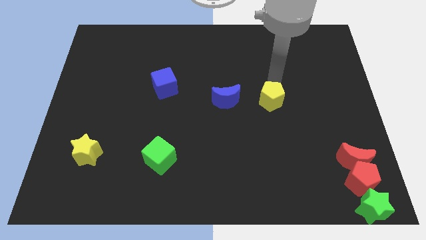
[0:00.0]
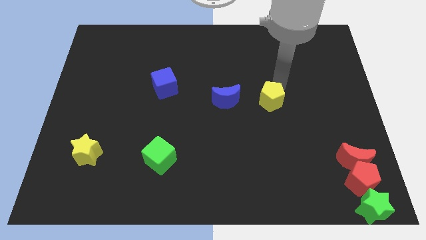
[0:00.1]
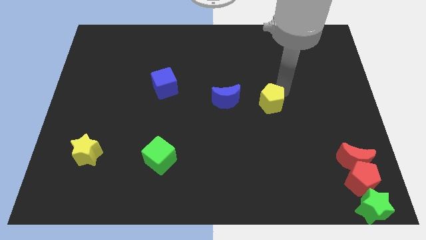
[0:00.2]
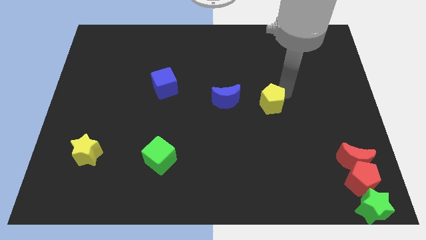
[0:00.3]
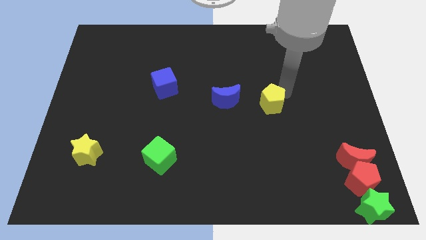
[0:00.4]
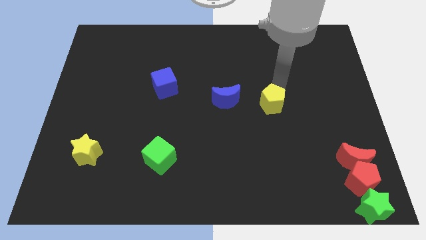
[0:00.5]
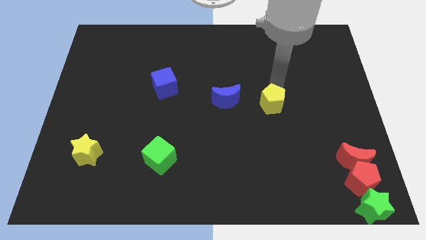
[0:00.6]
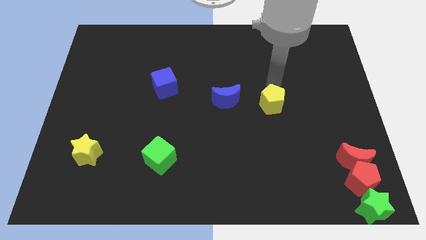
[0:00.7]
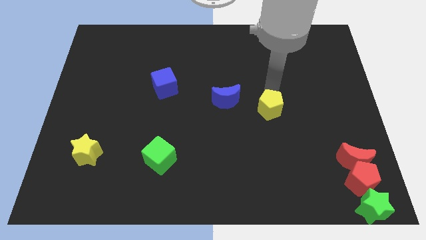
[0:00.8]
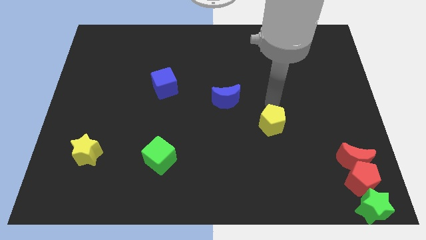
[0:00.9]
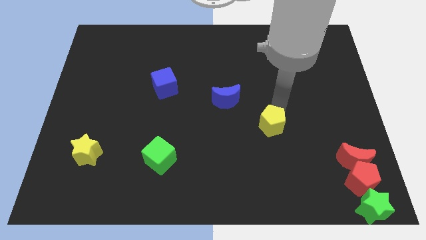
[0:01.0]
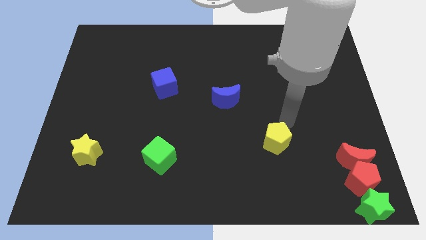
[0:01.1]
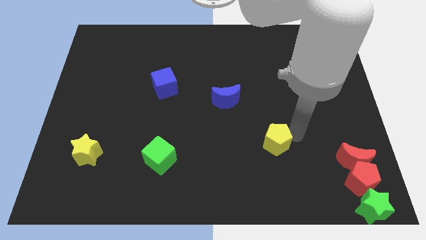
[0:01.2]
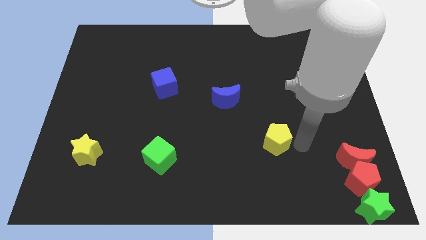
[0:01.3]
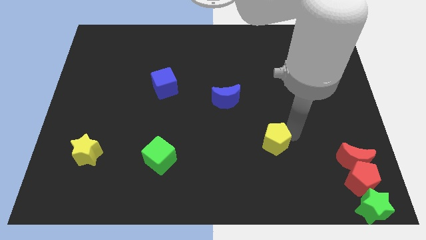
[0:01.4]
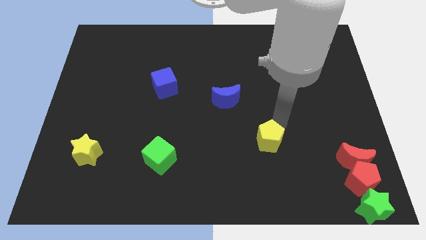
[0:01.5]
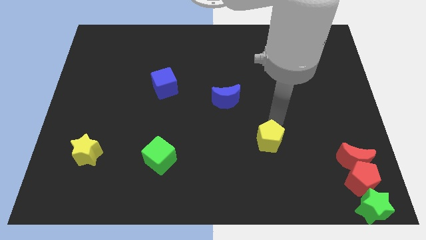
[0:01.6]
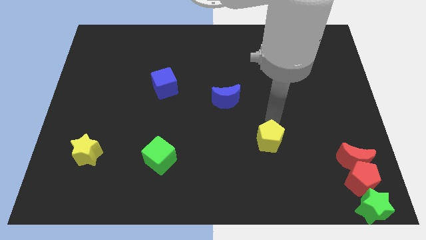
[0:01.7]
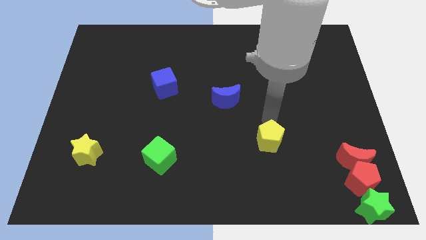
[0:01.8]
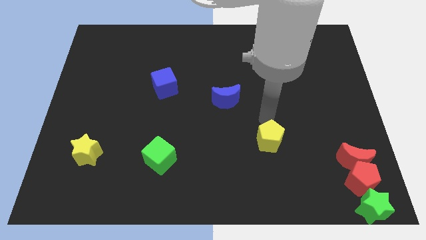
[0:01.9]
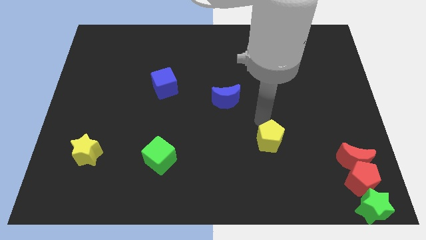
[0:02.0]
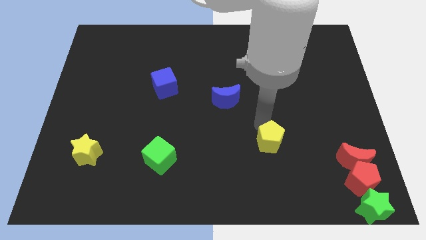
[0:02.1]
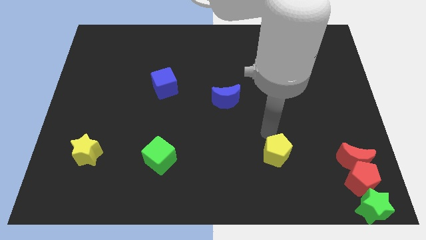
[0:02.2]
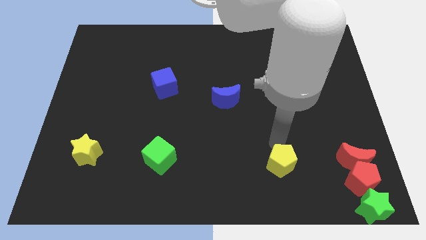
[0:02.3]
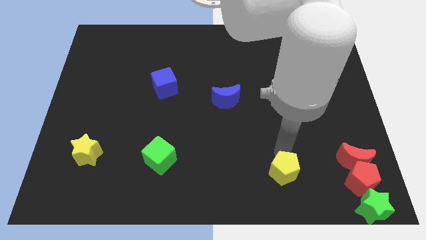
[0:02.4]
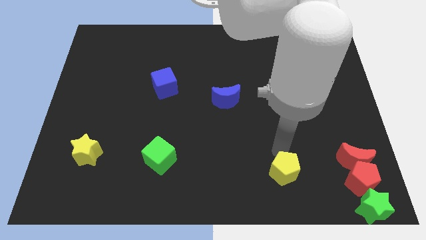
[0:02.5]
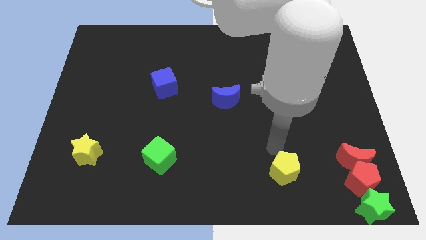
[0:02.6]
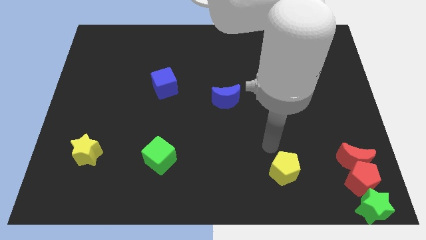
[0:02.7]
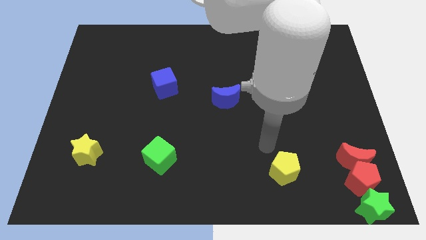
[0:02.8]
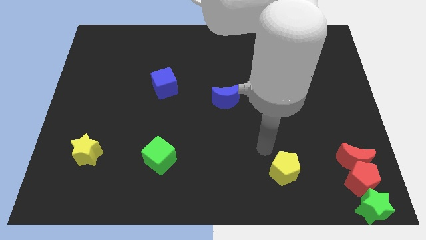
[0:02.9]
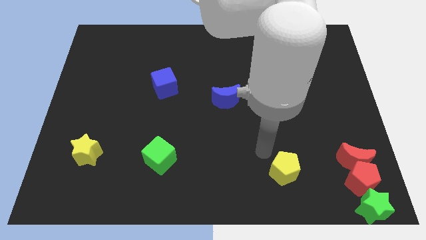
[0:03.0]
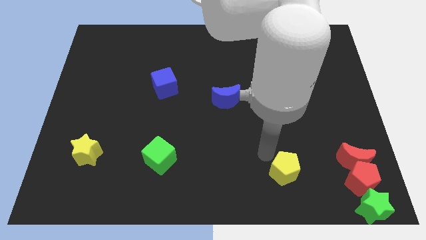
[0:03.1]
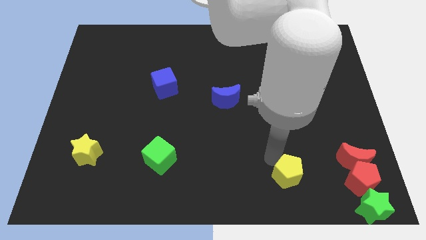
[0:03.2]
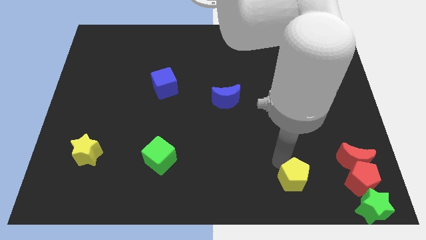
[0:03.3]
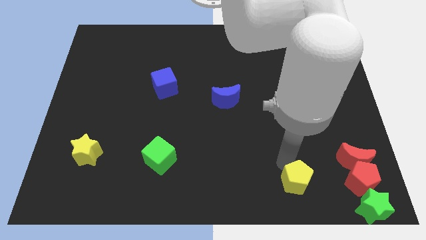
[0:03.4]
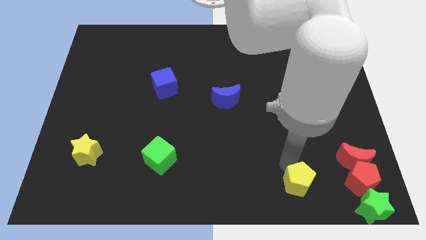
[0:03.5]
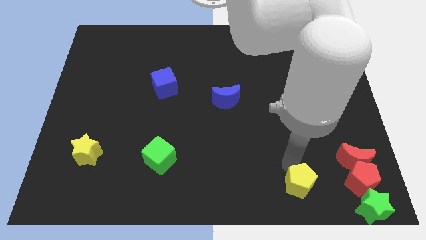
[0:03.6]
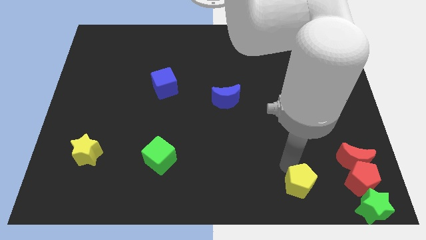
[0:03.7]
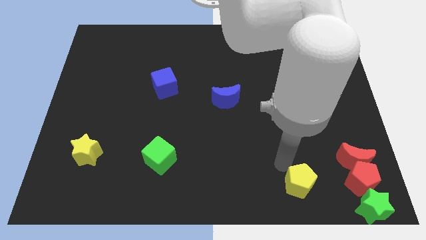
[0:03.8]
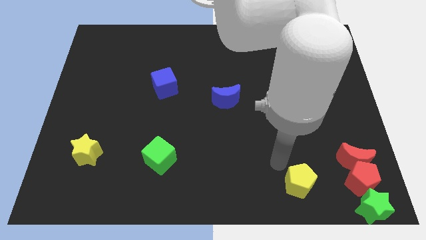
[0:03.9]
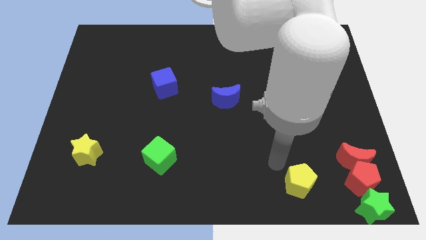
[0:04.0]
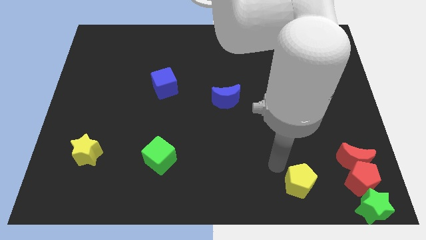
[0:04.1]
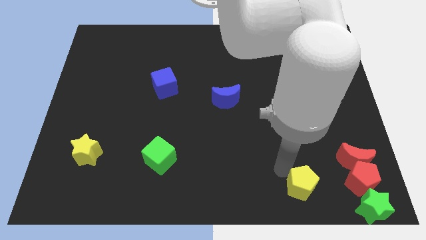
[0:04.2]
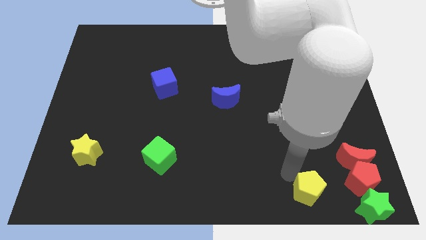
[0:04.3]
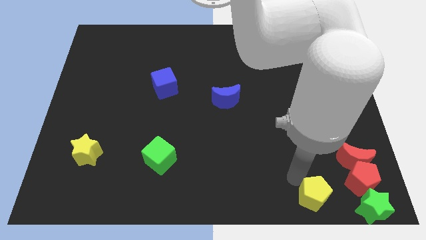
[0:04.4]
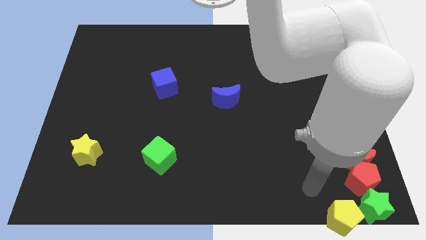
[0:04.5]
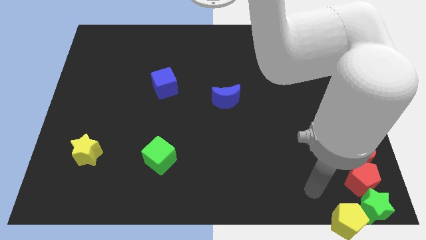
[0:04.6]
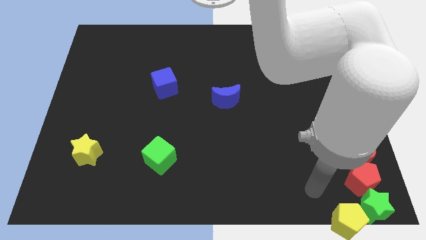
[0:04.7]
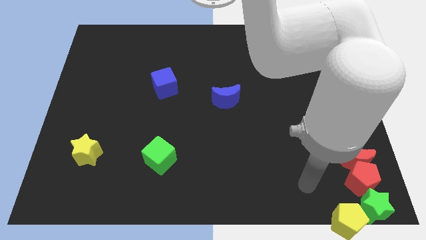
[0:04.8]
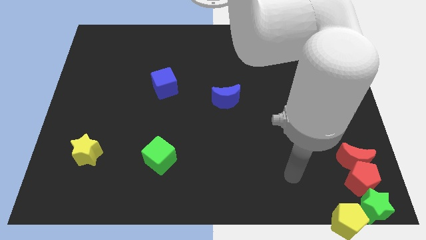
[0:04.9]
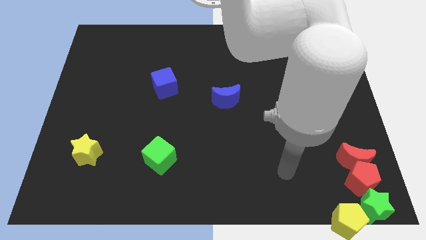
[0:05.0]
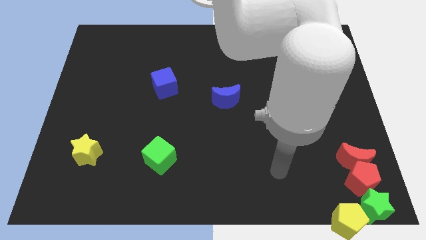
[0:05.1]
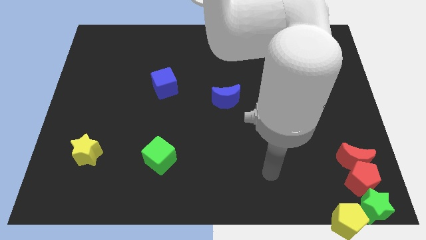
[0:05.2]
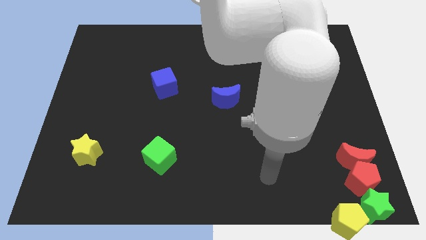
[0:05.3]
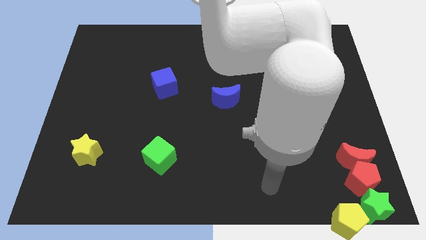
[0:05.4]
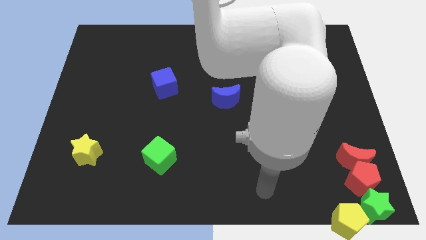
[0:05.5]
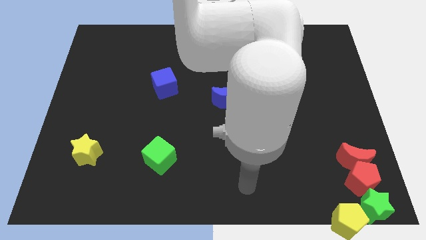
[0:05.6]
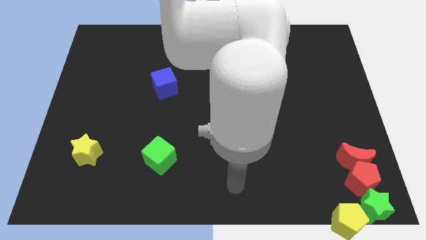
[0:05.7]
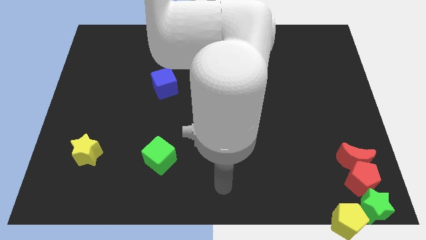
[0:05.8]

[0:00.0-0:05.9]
push the yellow pentagon to the left of the green star

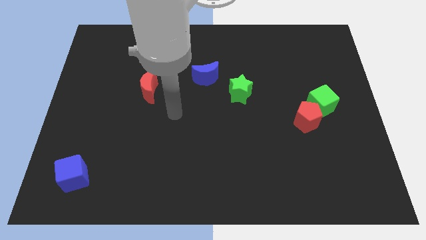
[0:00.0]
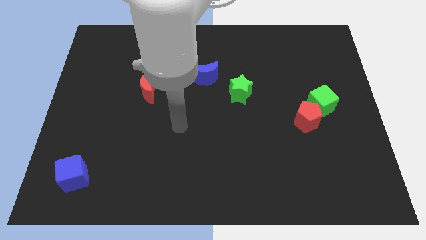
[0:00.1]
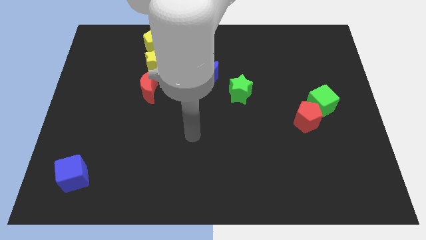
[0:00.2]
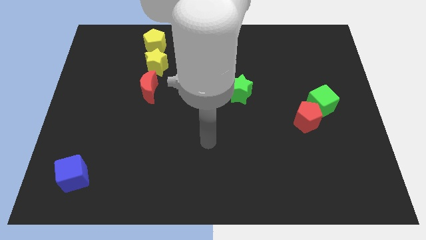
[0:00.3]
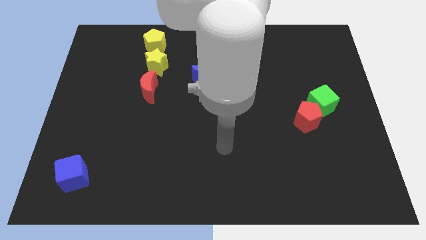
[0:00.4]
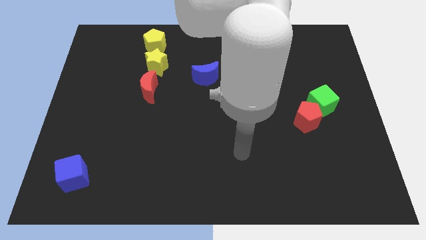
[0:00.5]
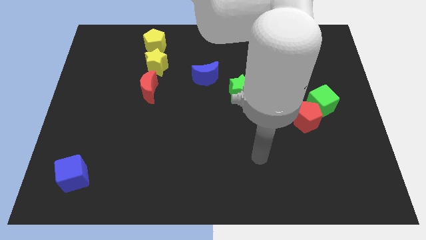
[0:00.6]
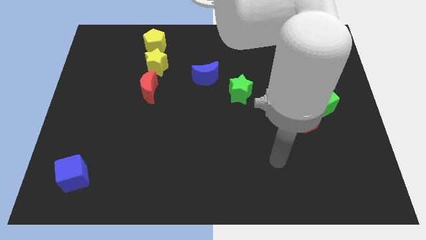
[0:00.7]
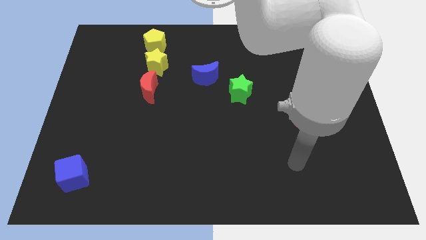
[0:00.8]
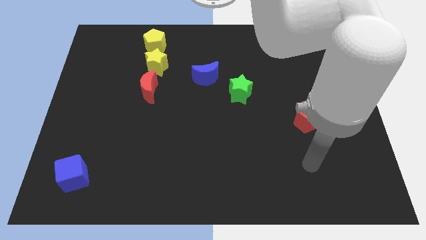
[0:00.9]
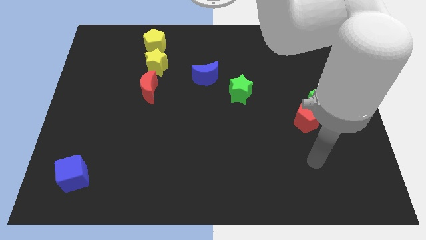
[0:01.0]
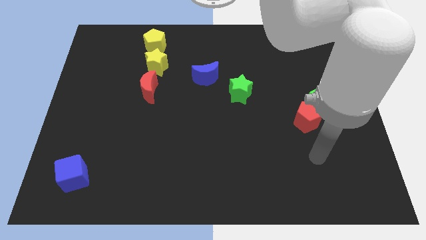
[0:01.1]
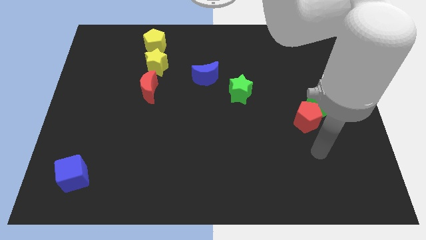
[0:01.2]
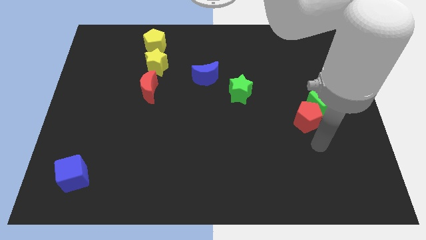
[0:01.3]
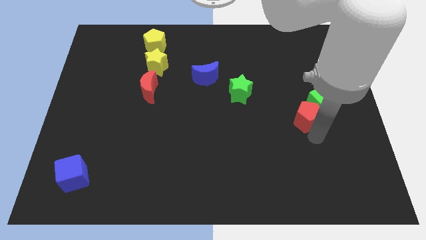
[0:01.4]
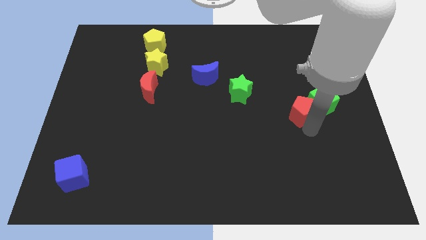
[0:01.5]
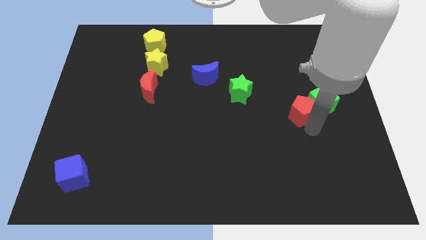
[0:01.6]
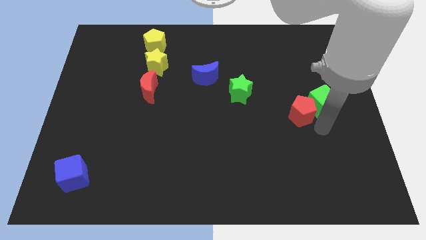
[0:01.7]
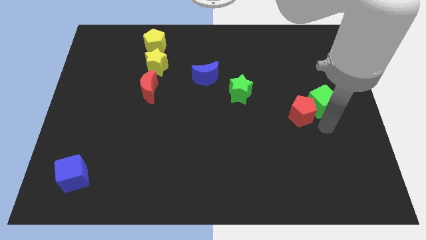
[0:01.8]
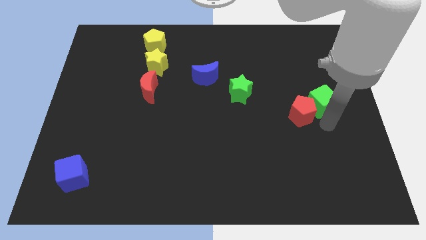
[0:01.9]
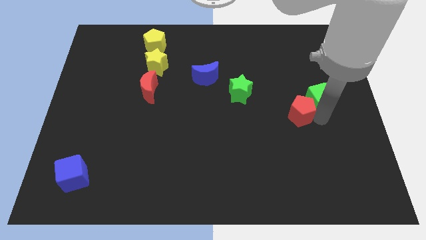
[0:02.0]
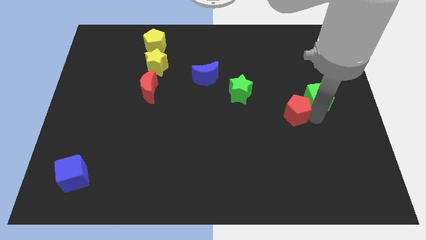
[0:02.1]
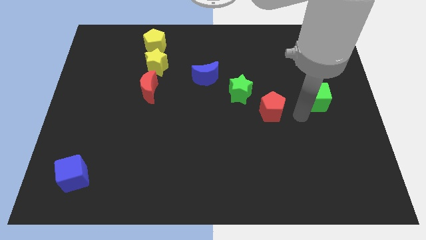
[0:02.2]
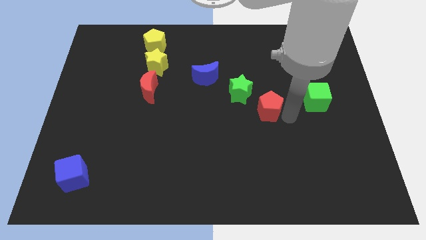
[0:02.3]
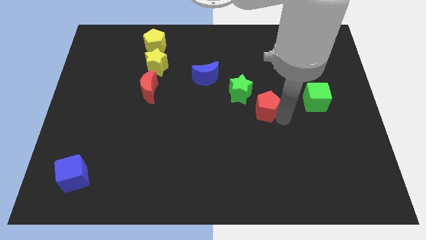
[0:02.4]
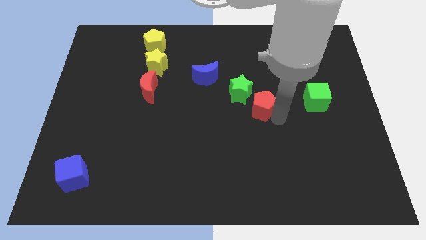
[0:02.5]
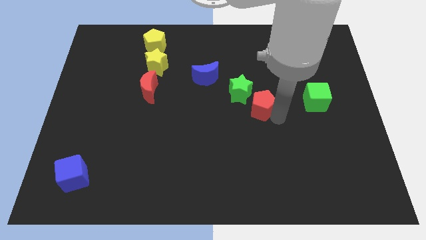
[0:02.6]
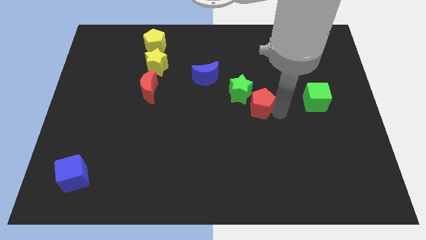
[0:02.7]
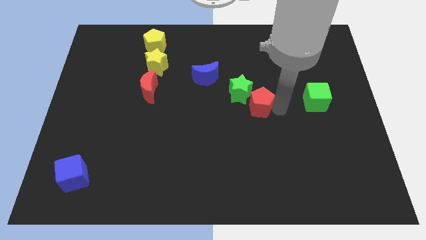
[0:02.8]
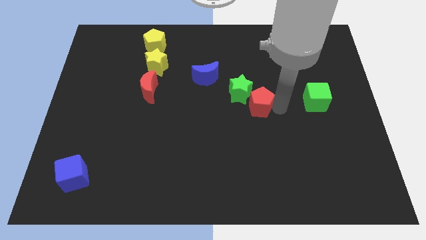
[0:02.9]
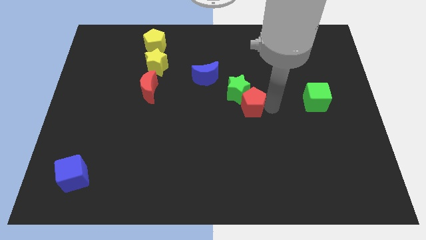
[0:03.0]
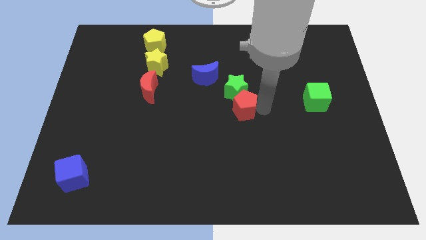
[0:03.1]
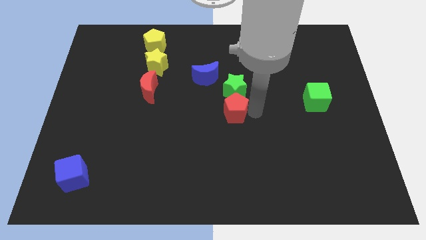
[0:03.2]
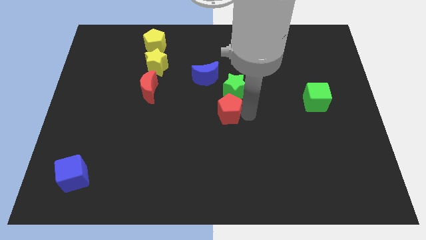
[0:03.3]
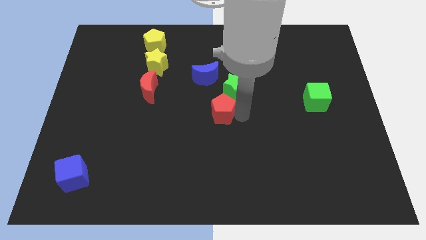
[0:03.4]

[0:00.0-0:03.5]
move the red pentagon below the green star
